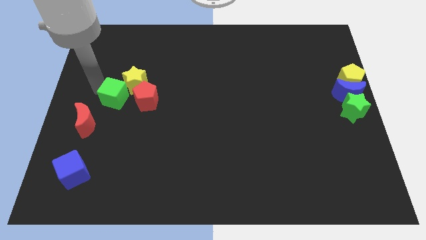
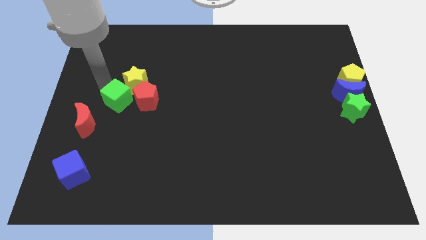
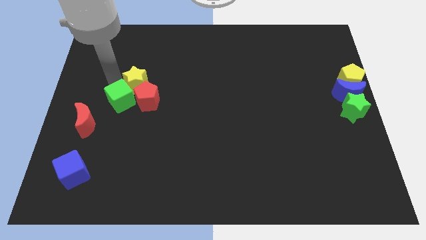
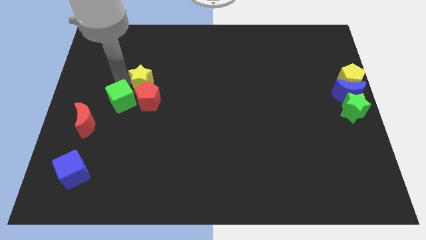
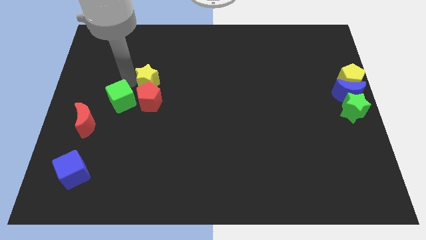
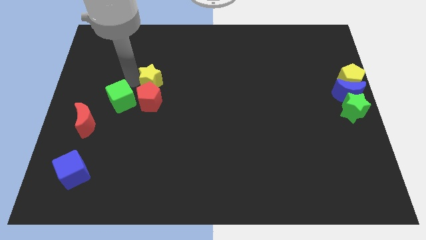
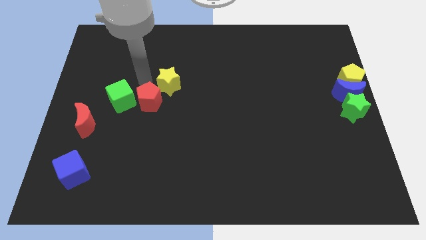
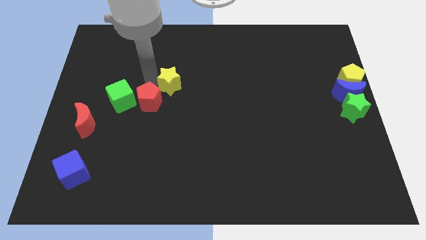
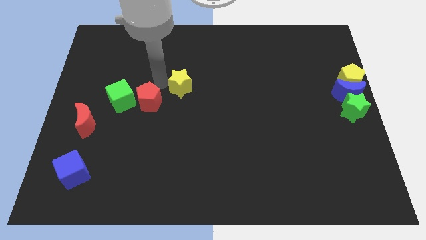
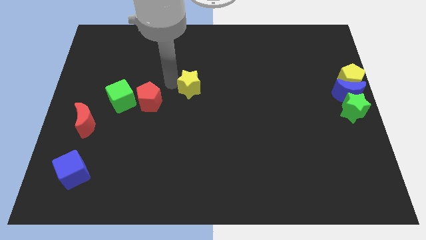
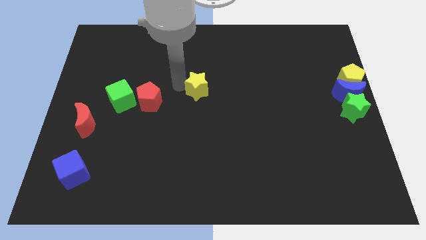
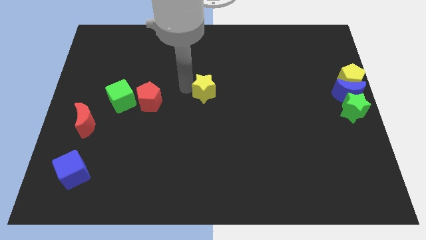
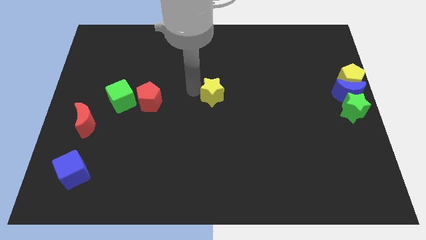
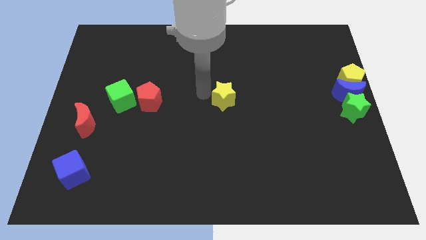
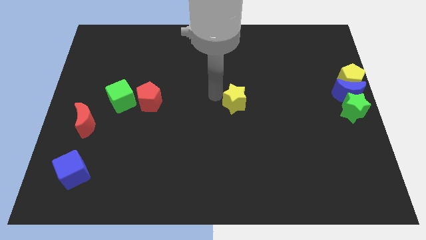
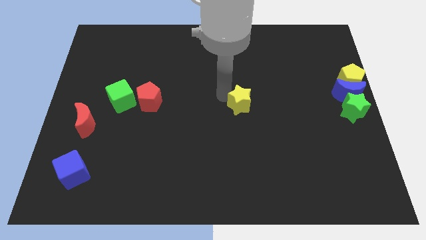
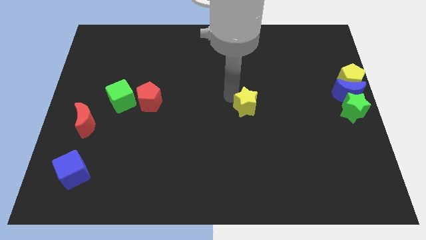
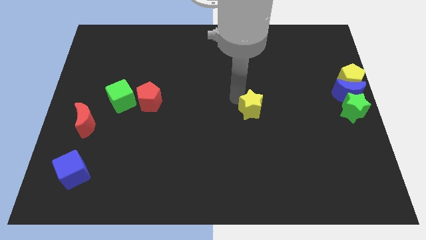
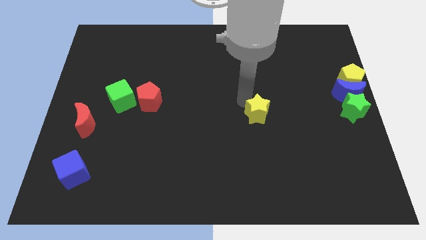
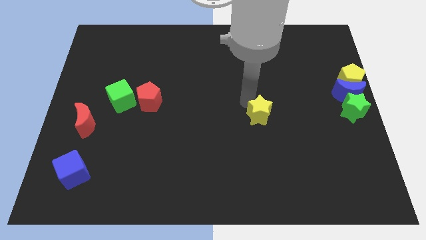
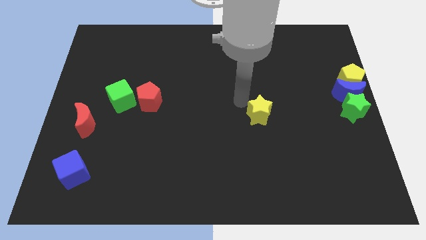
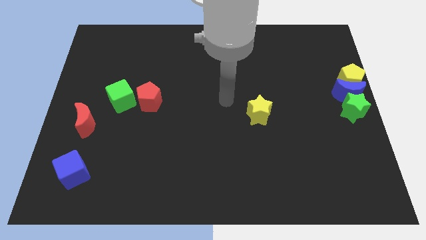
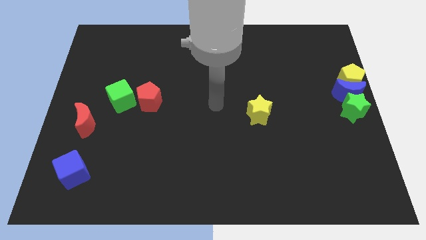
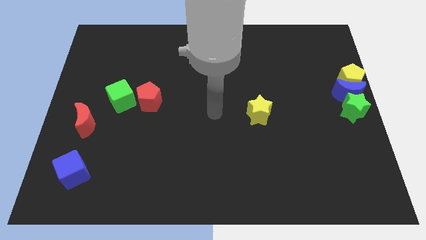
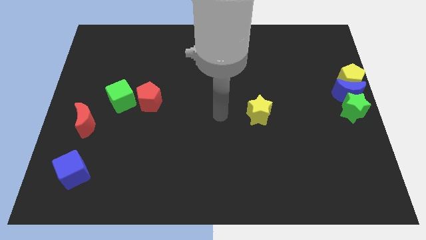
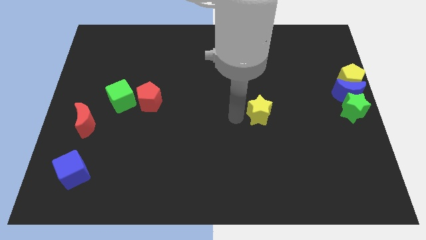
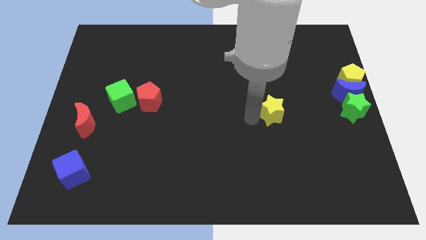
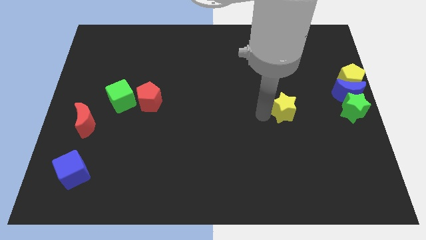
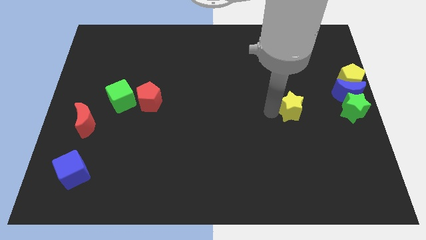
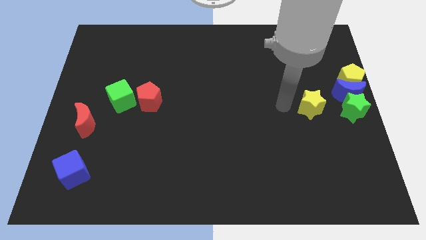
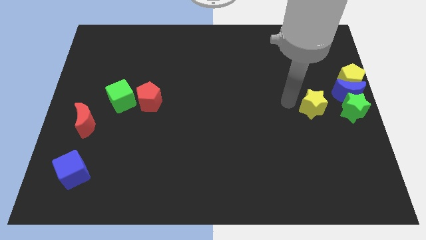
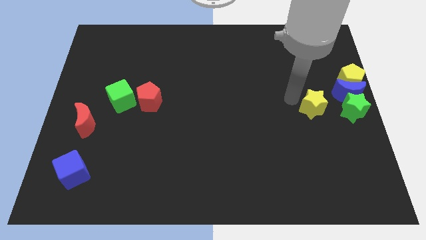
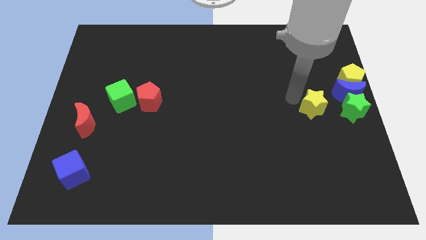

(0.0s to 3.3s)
move yellow star away from red pentagon

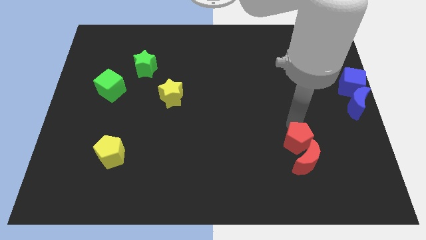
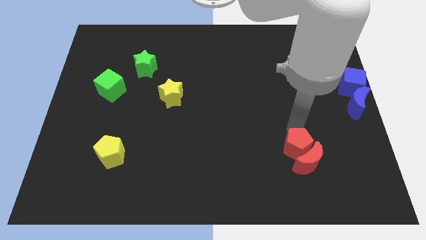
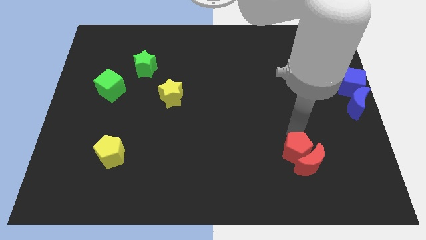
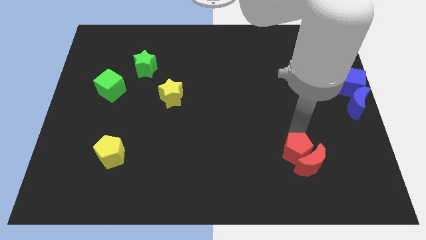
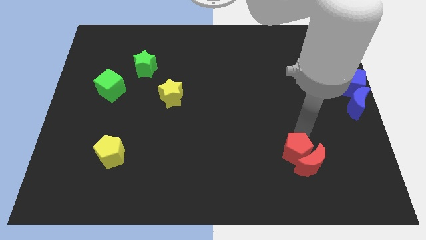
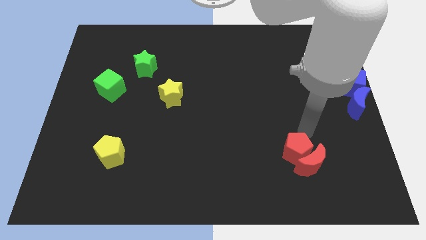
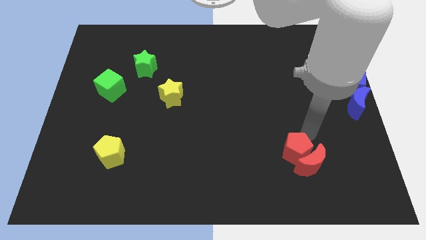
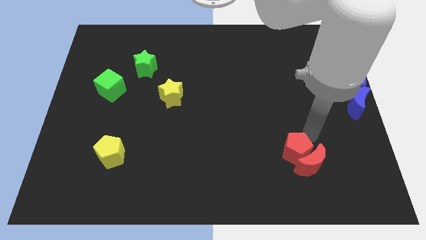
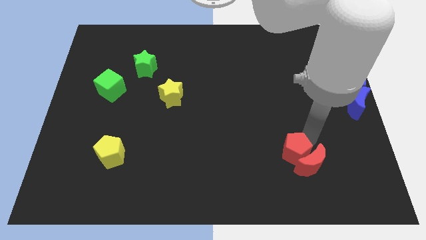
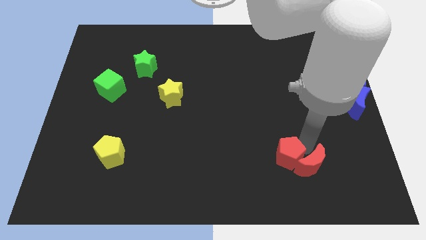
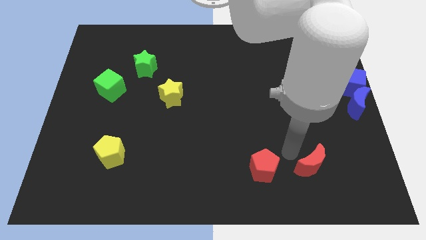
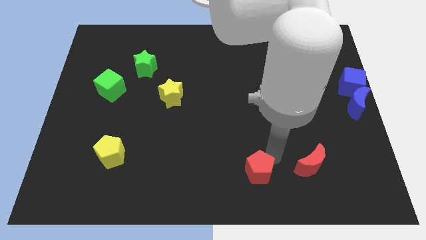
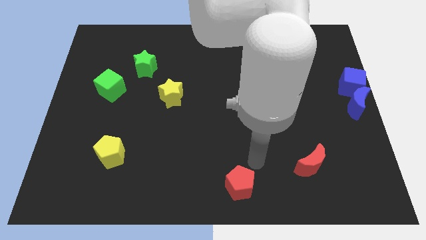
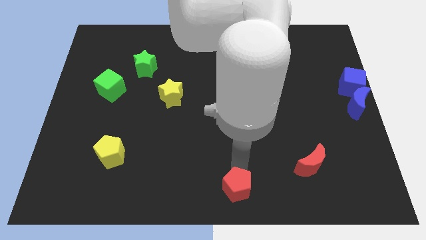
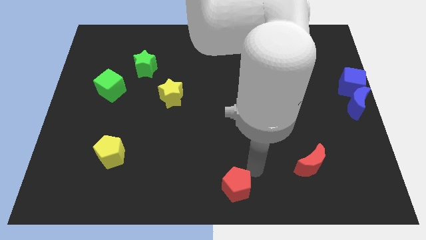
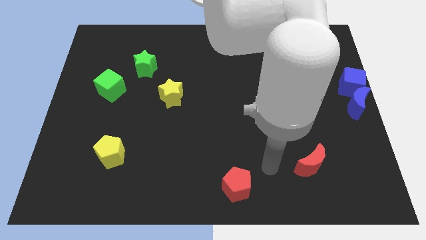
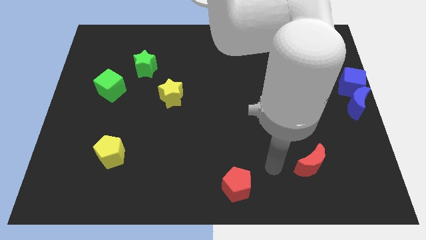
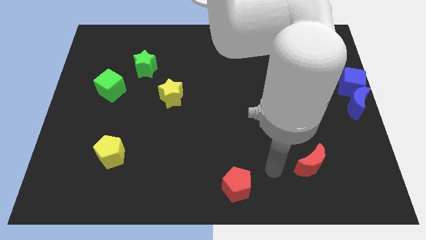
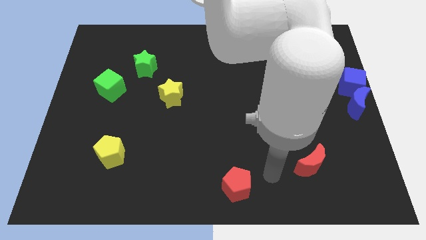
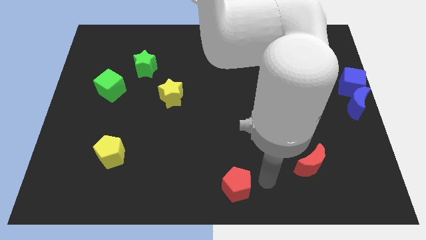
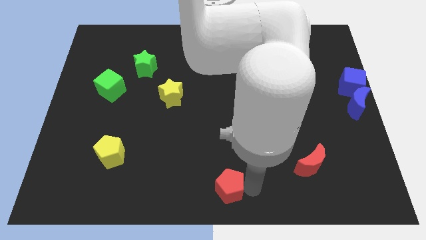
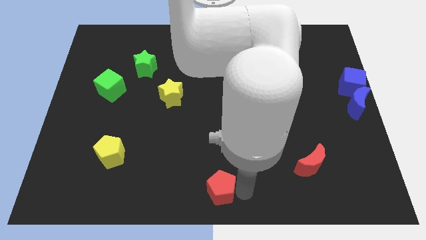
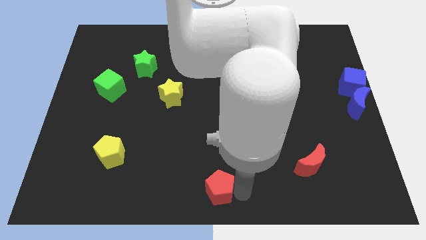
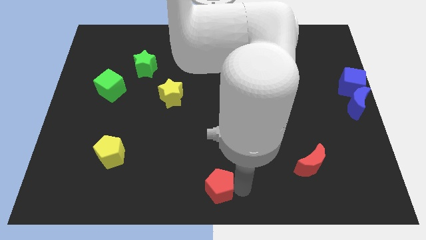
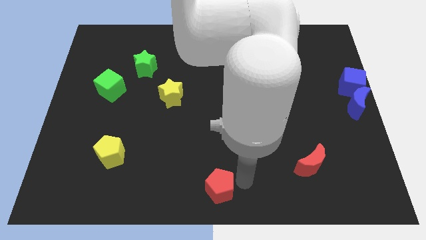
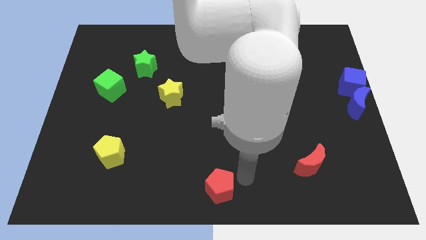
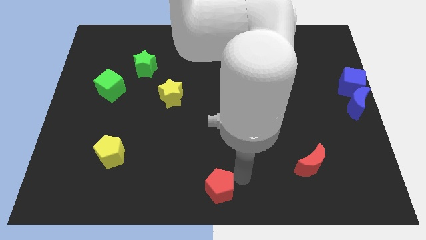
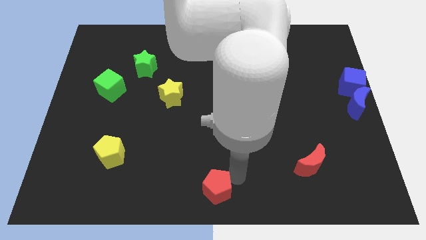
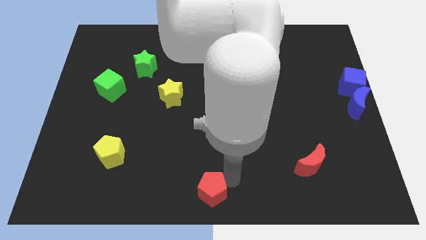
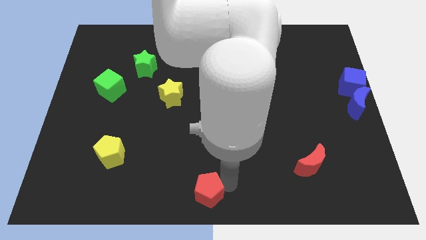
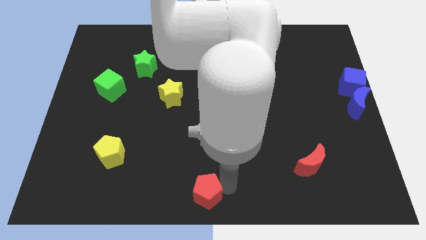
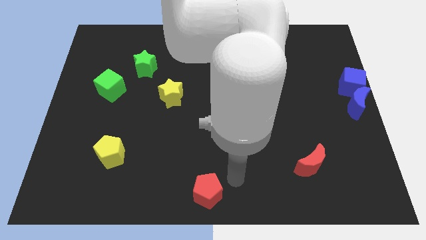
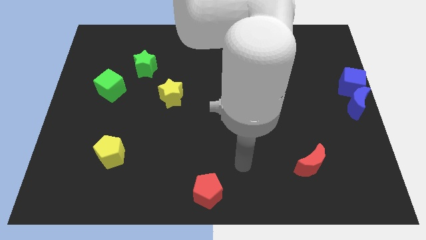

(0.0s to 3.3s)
push the red pentagon to the bottom center

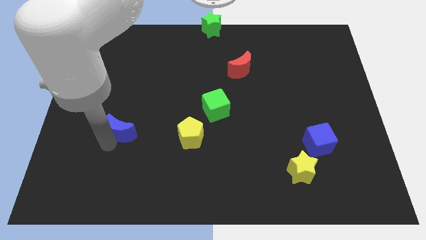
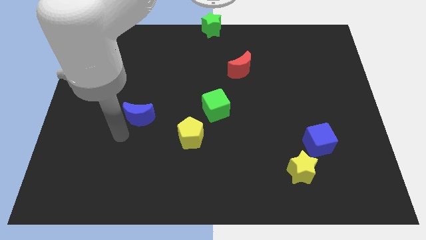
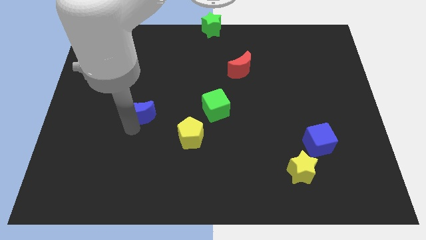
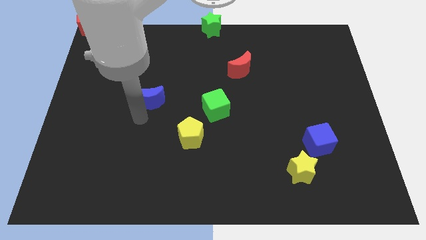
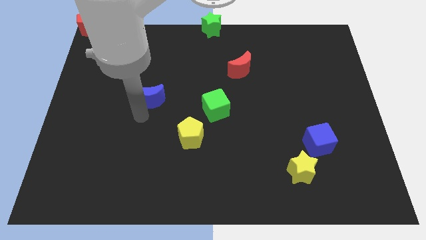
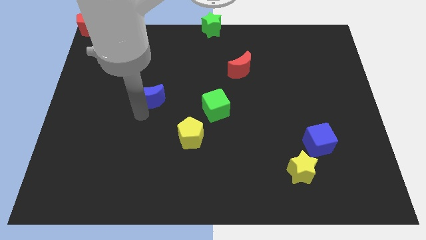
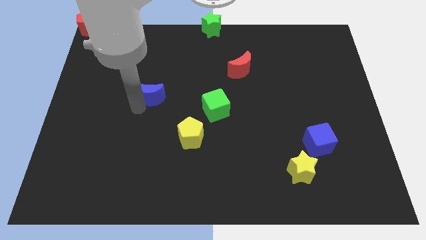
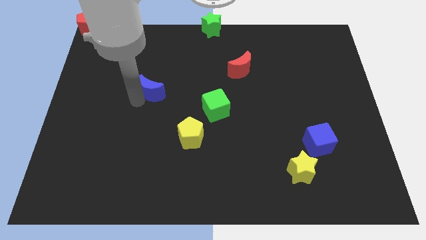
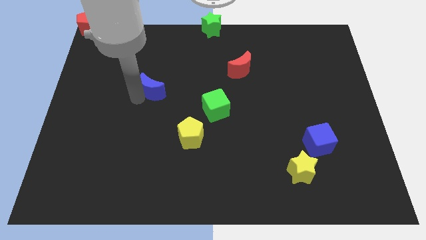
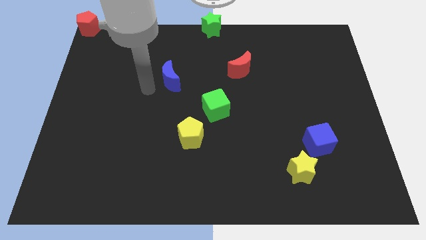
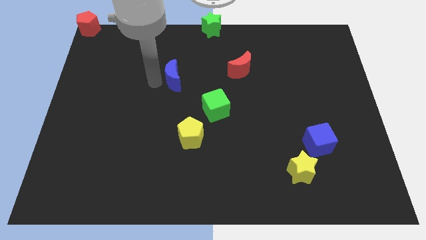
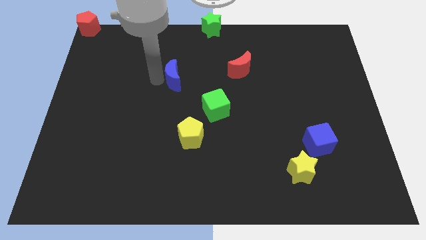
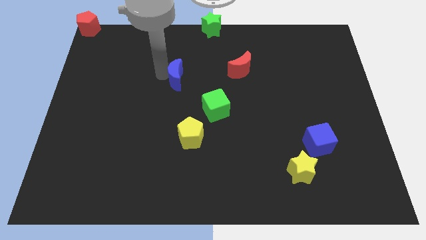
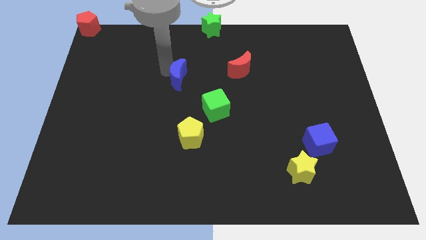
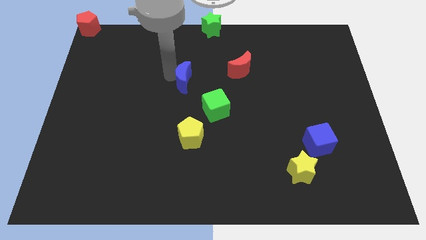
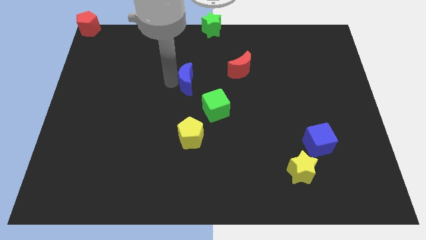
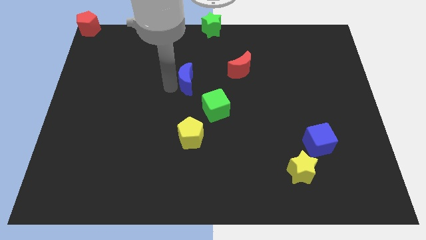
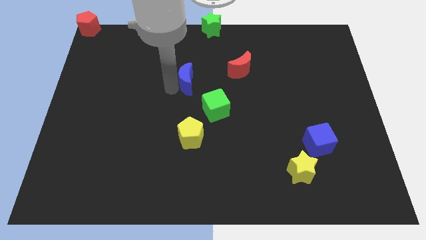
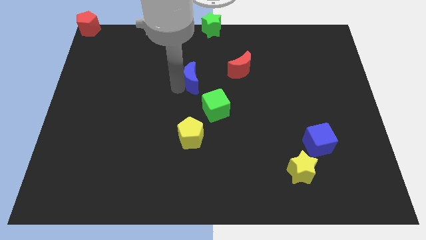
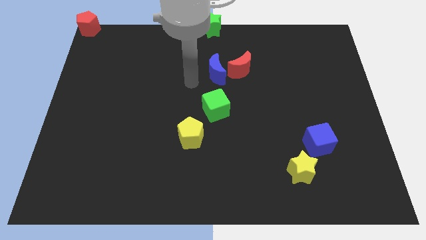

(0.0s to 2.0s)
push the blue moon towards the red moon

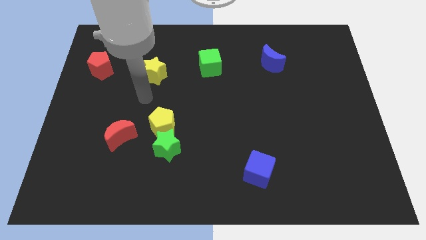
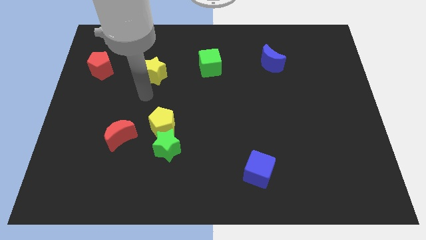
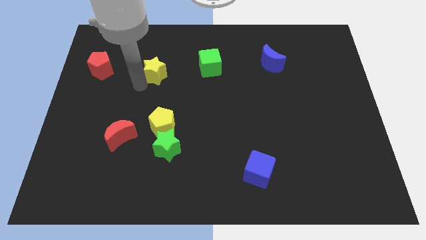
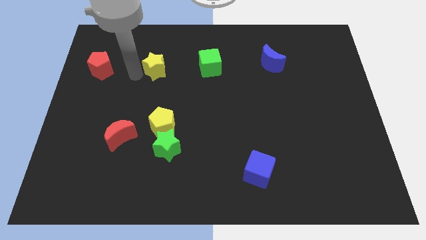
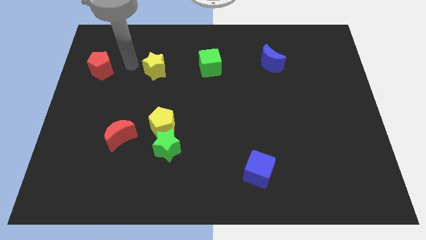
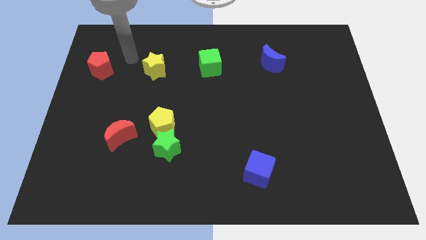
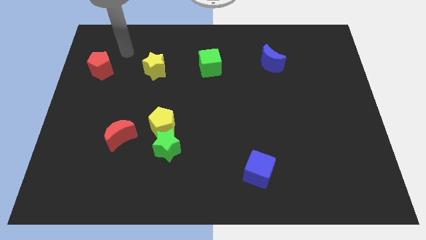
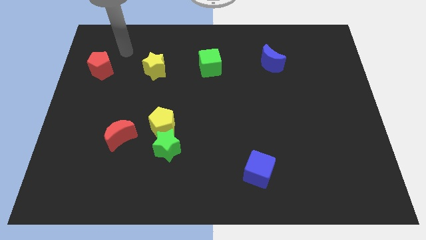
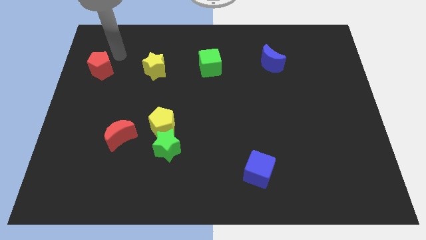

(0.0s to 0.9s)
move the yellow star slightly upwards
